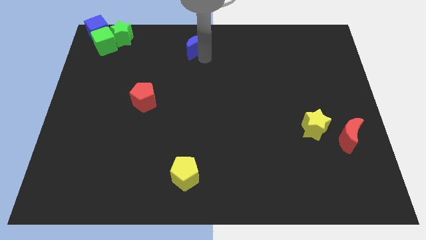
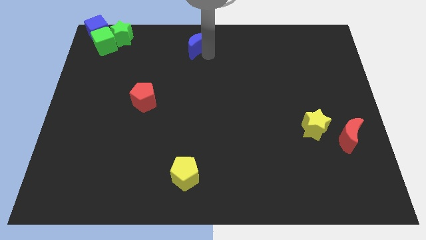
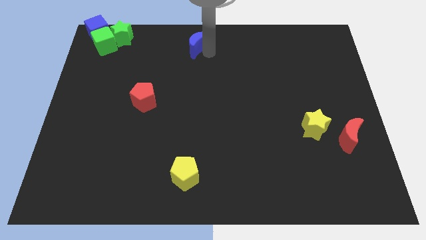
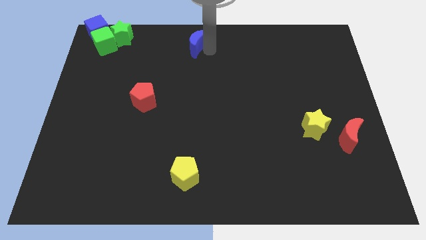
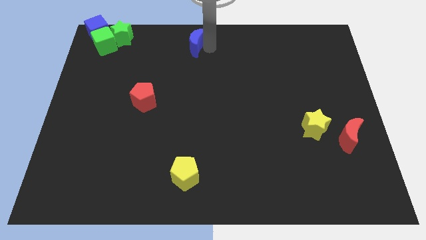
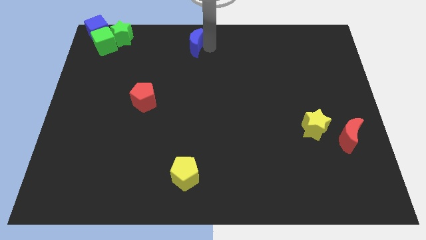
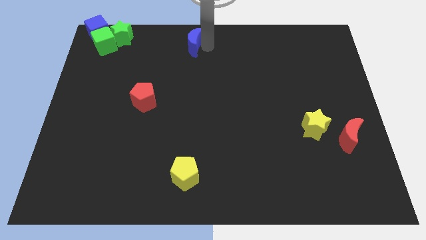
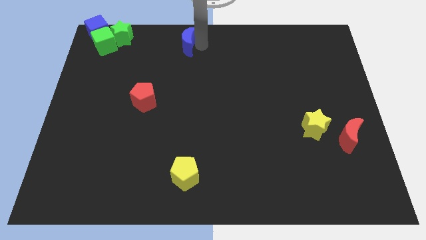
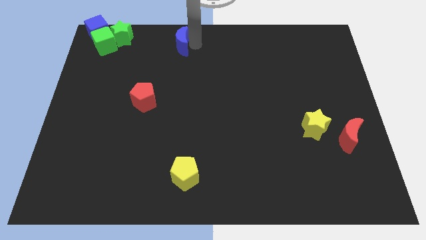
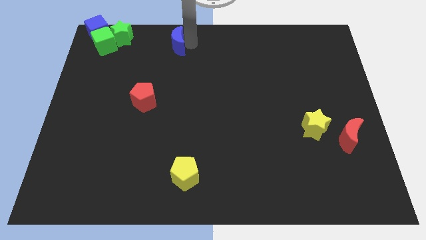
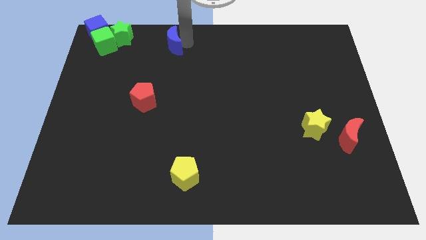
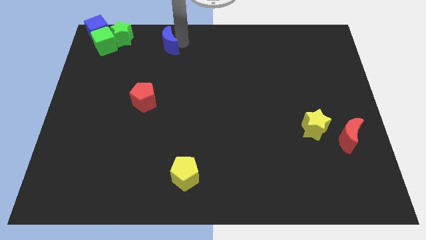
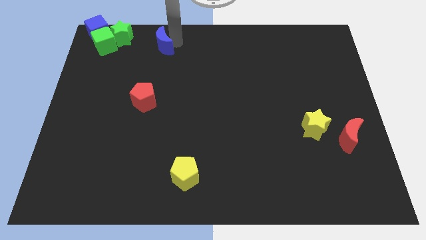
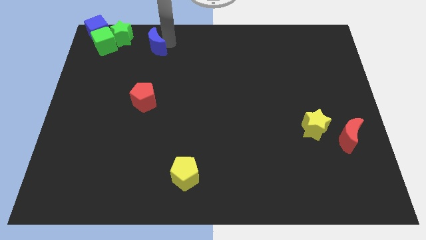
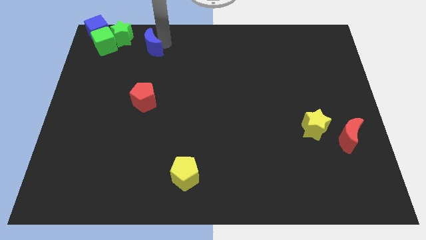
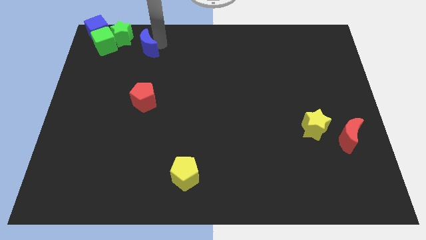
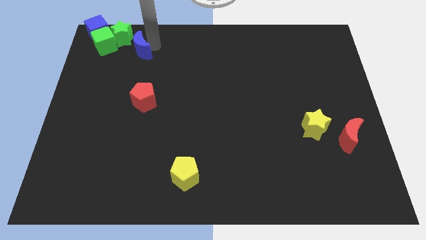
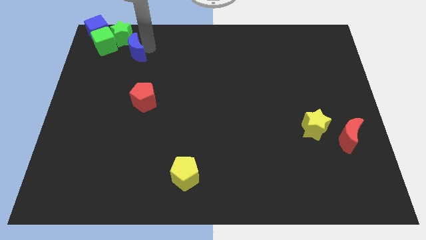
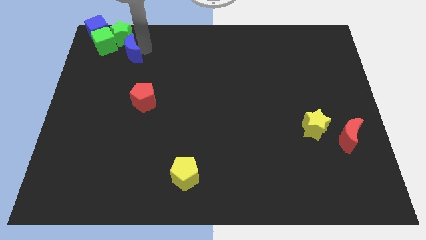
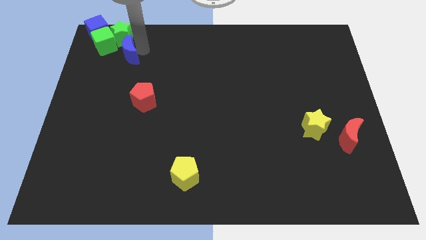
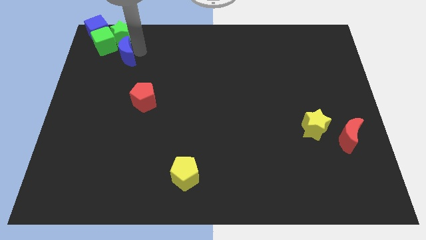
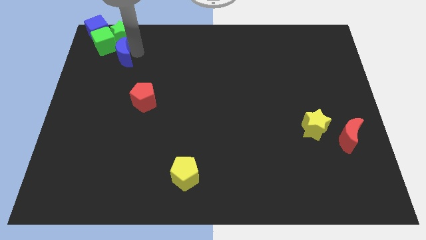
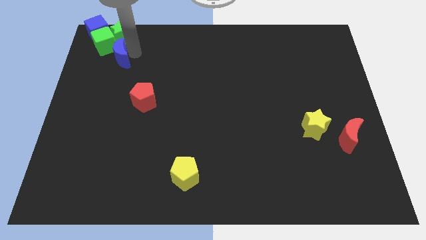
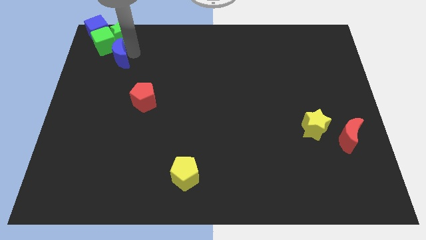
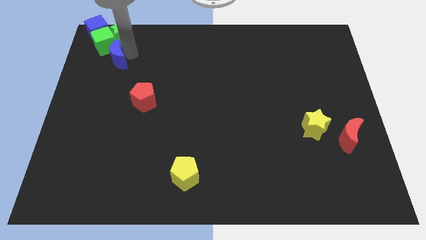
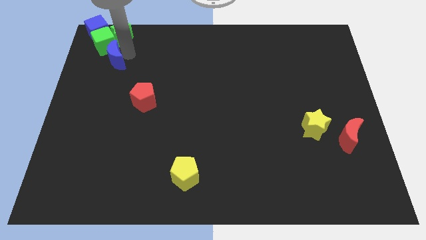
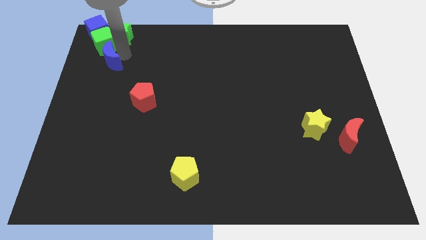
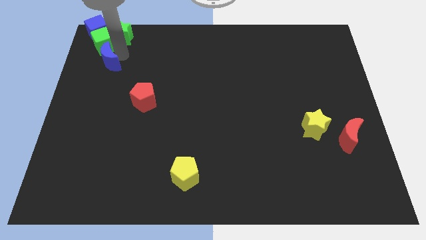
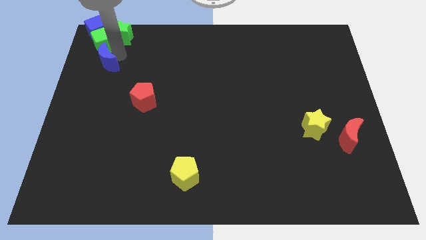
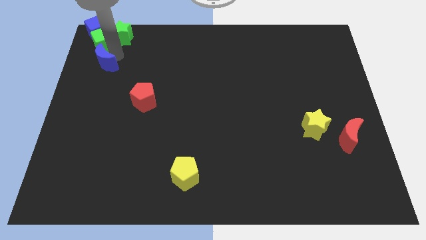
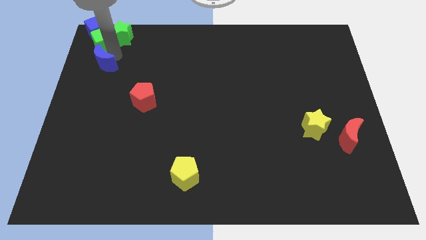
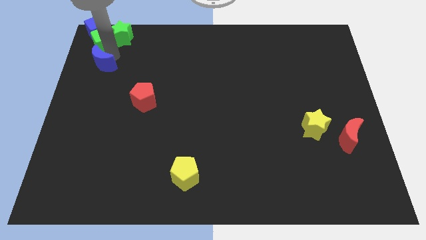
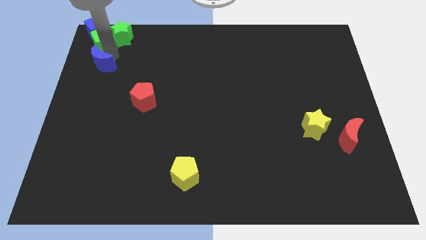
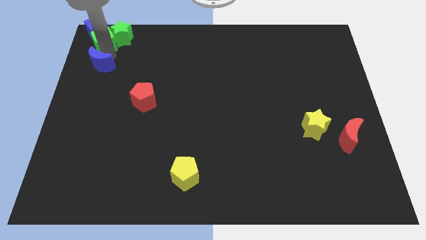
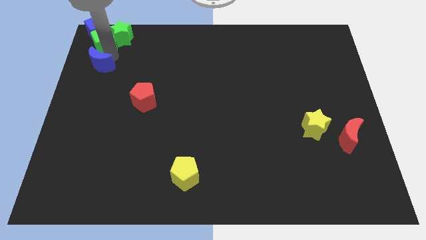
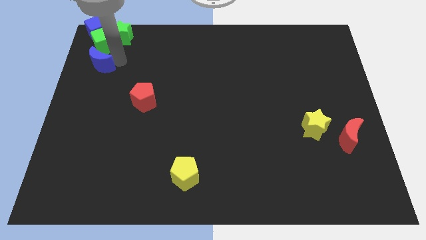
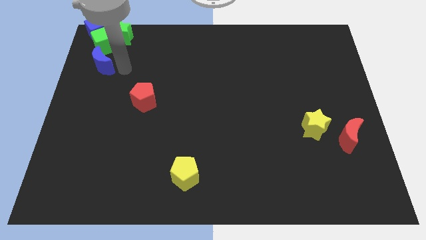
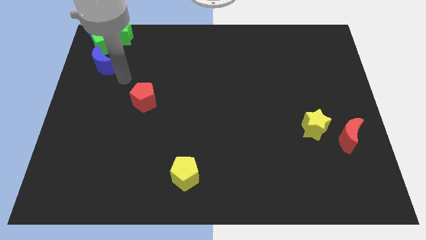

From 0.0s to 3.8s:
move the blue crescent below the green cube diagonally

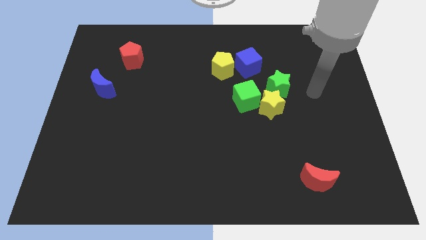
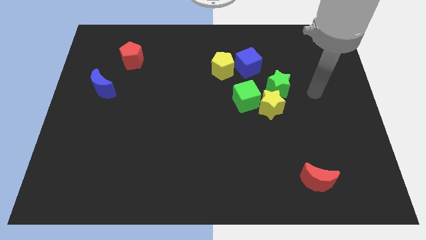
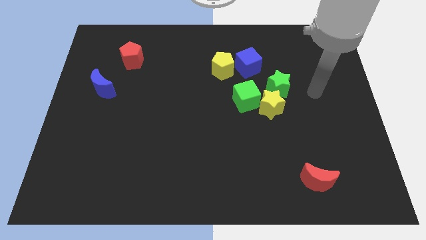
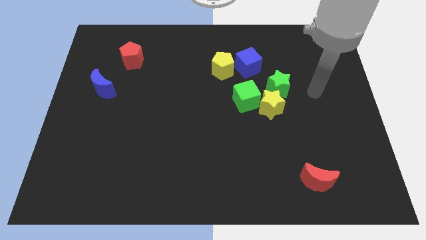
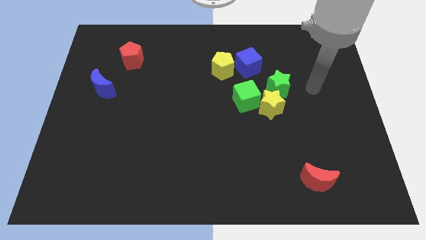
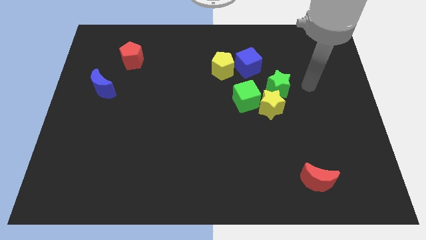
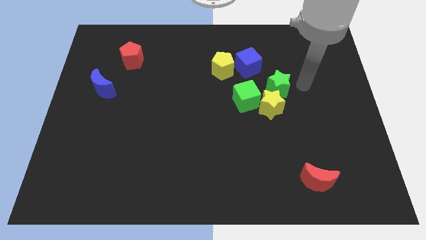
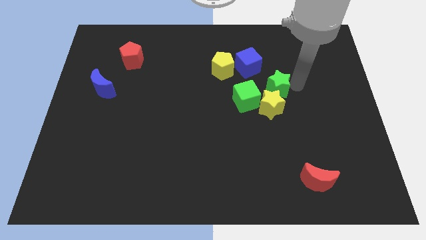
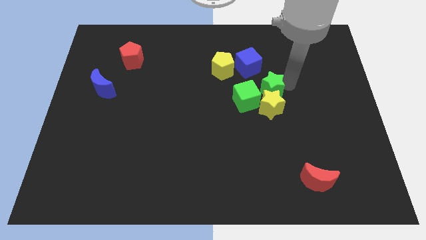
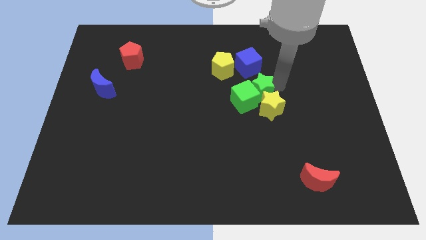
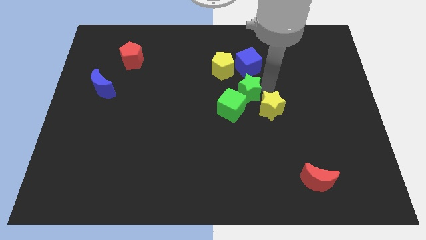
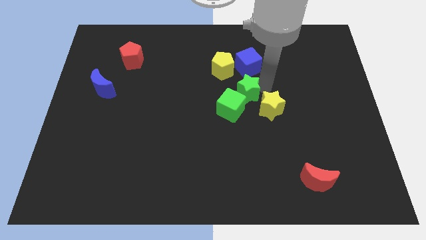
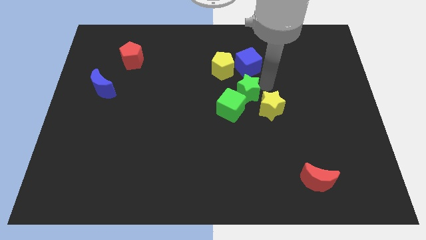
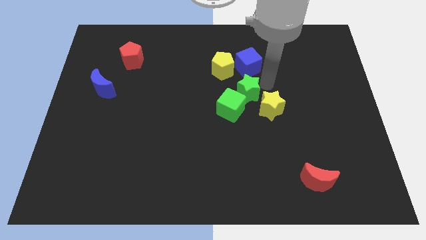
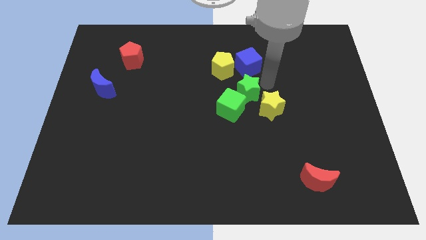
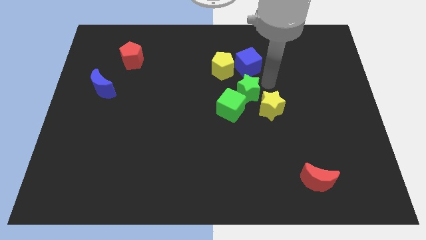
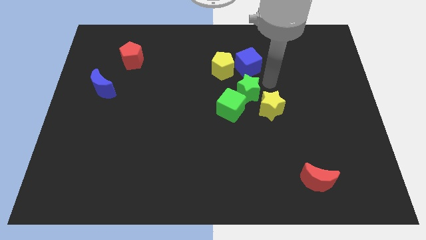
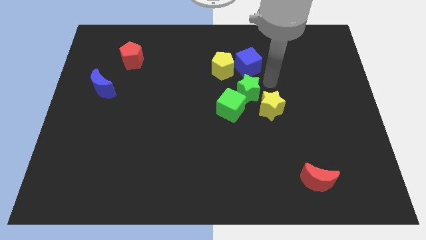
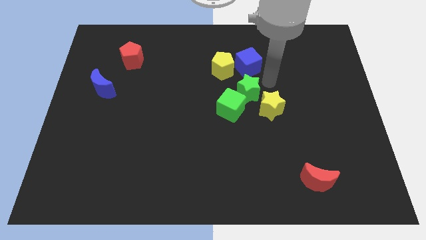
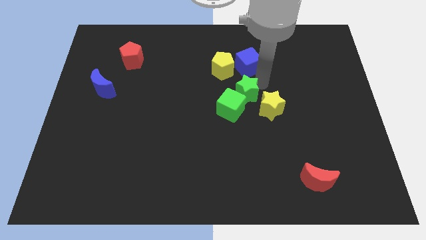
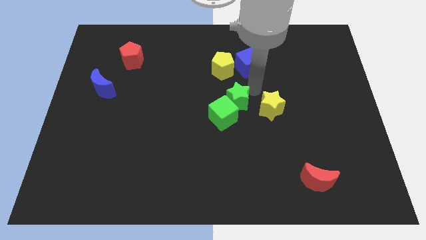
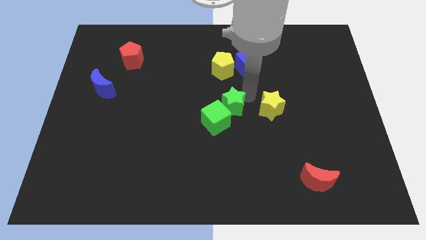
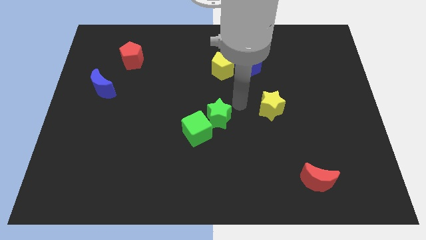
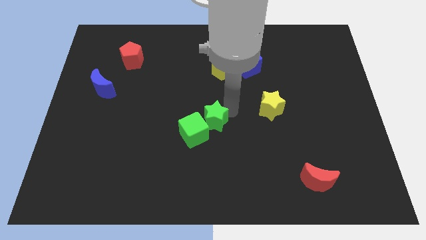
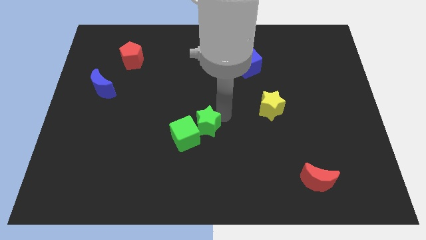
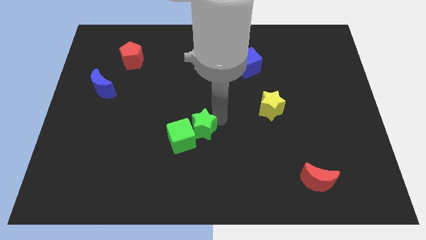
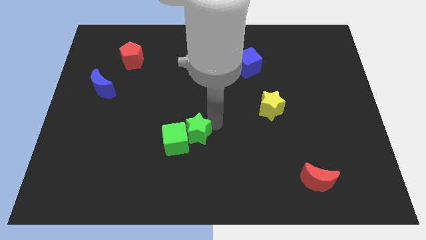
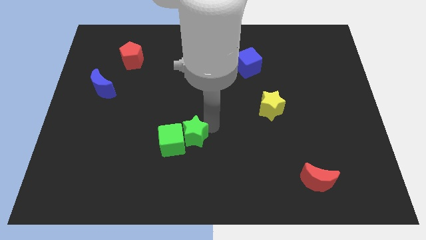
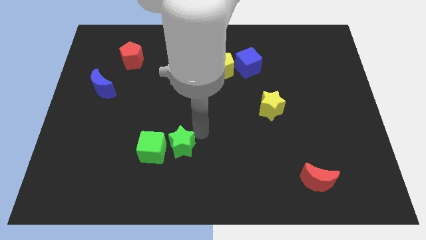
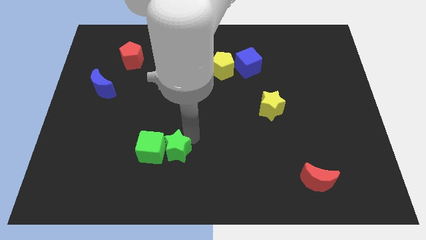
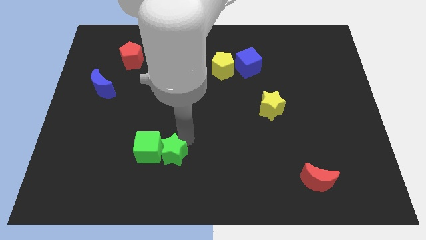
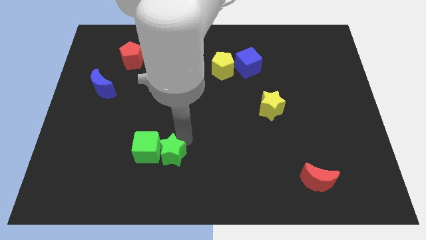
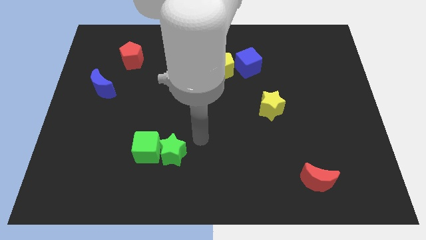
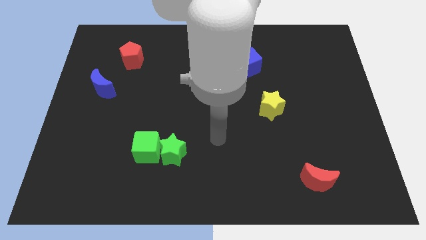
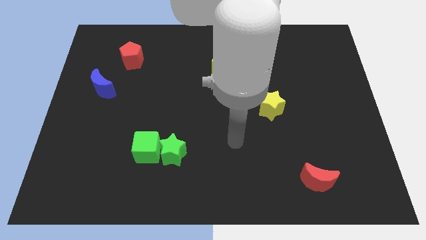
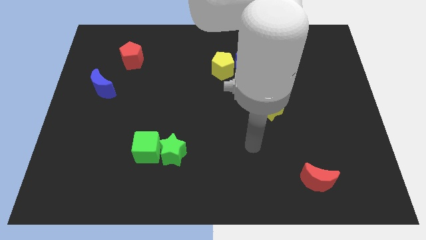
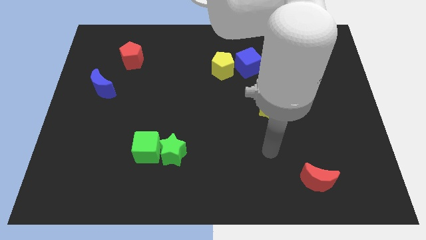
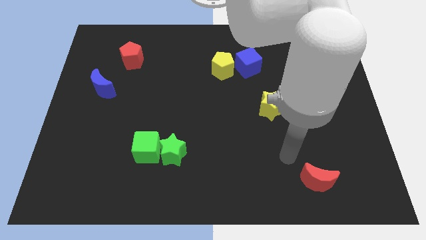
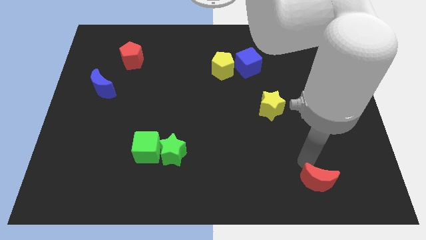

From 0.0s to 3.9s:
push the green blocks diagonally bottom left to the yellow pentagon

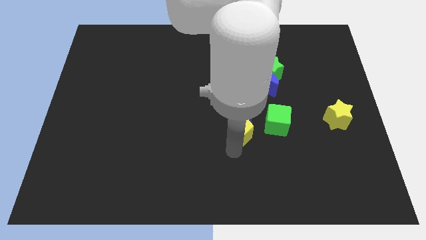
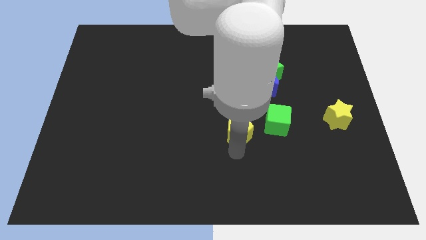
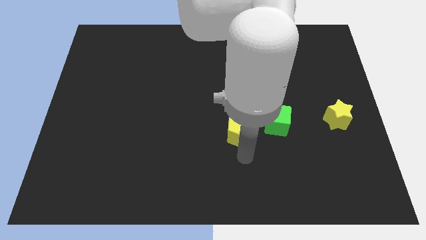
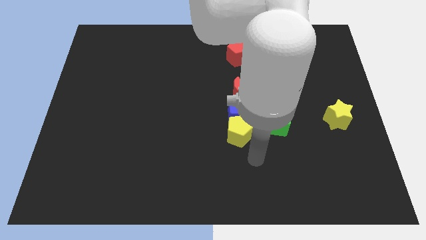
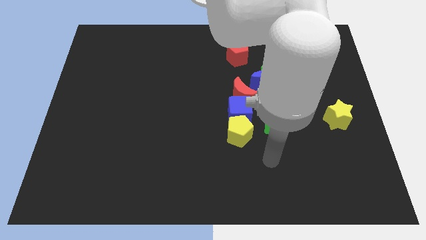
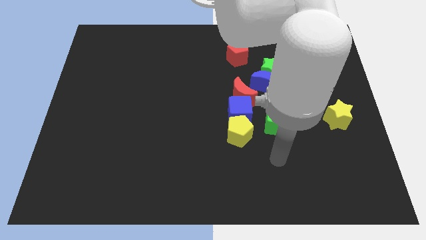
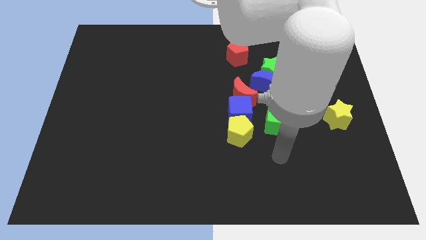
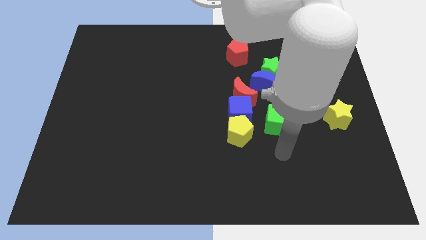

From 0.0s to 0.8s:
move the arm to the bottom of the green cube

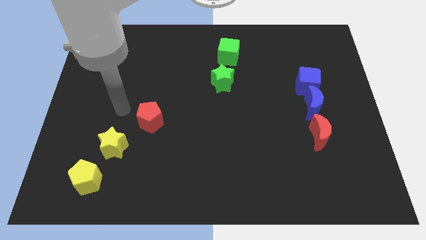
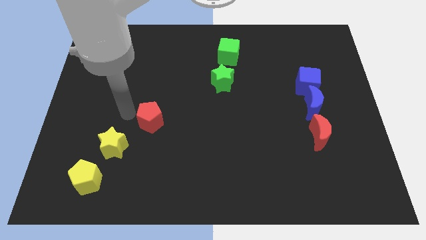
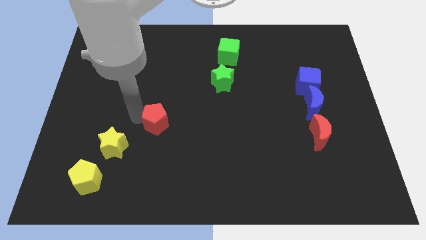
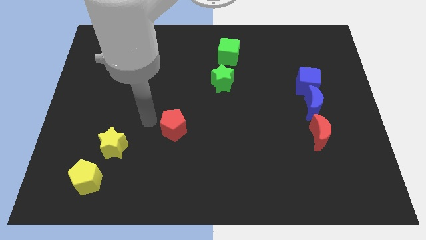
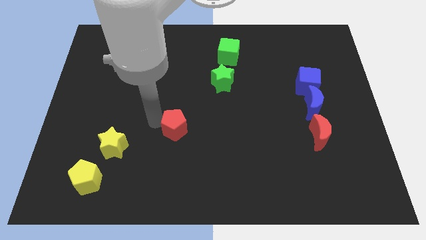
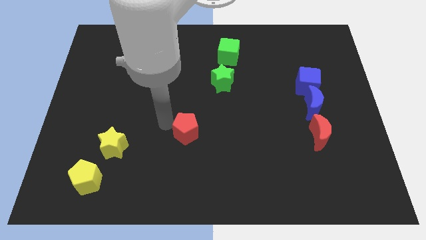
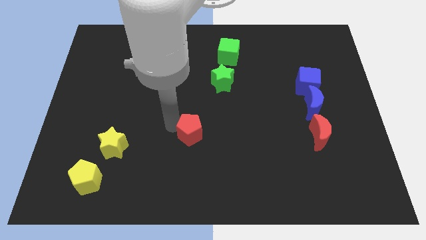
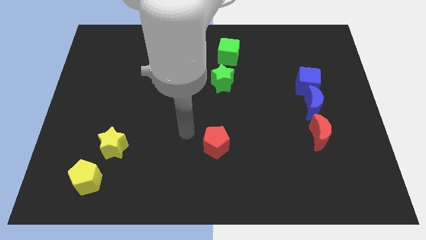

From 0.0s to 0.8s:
push the red pentagon to the right of the yellow star
